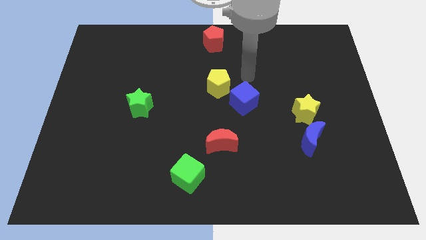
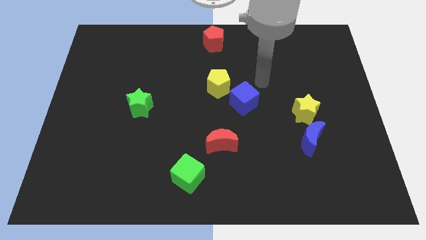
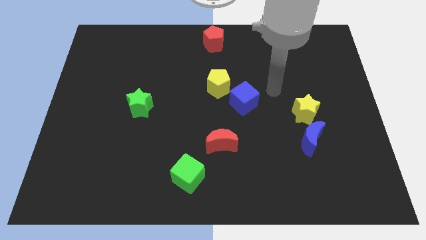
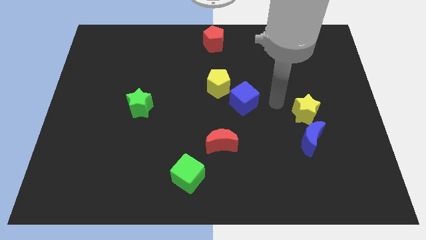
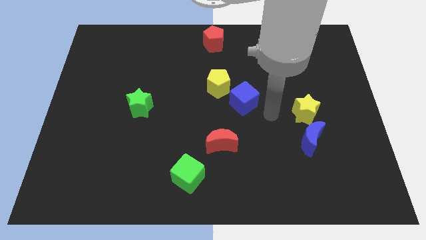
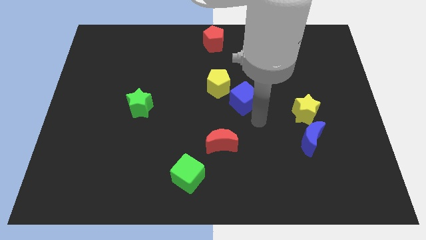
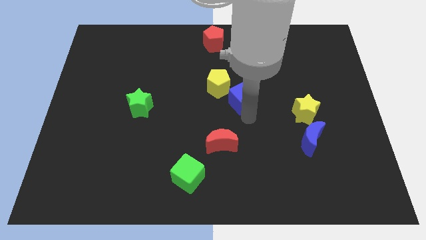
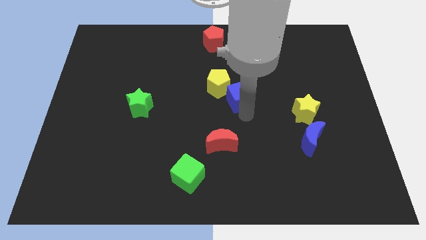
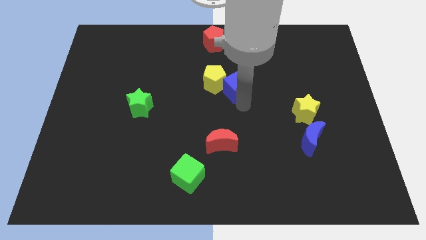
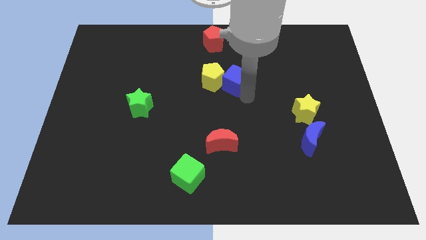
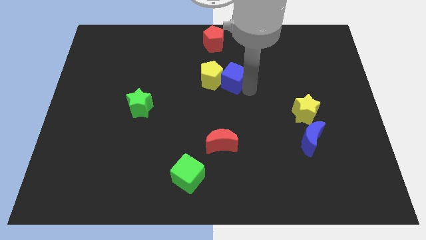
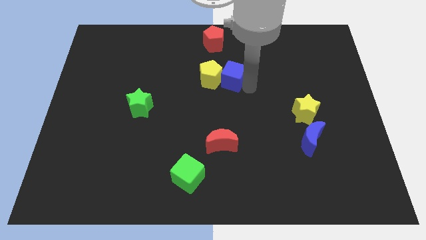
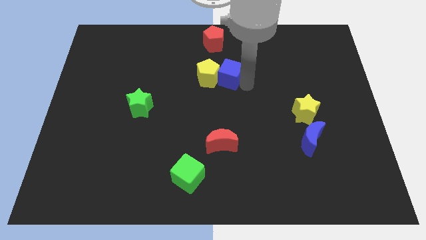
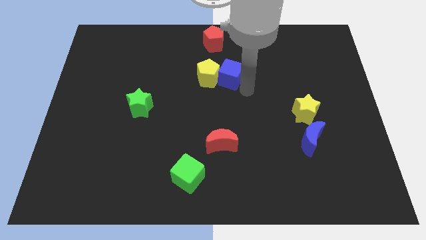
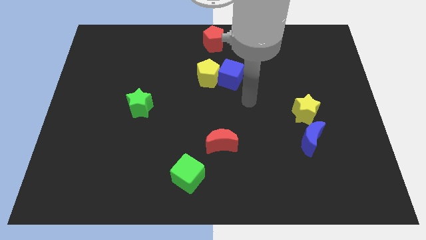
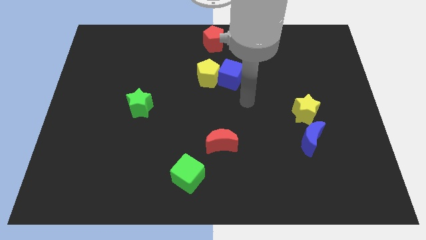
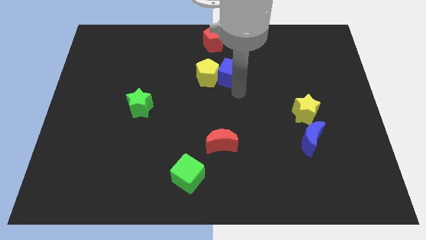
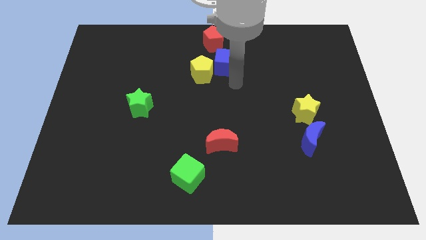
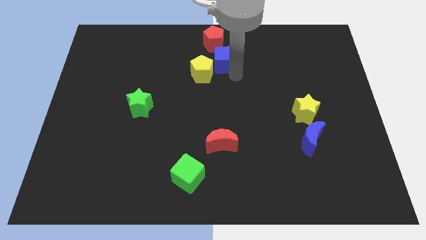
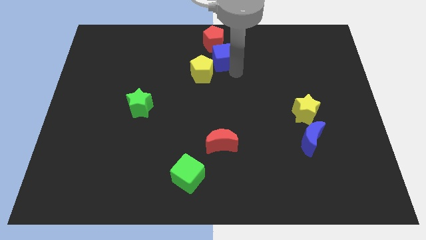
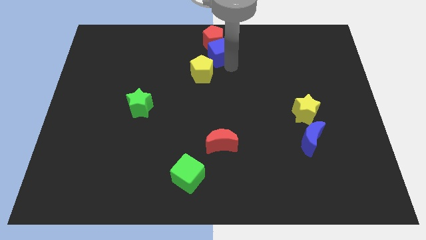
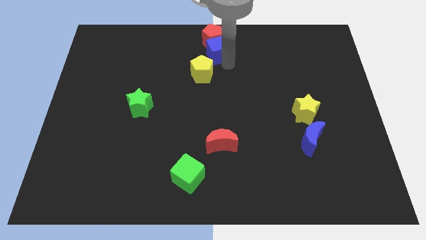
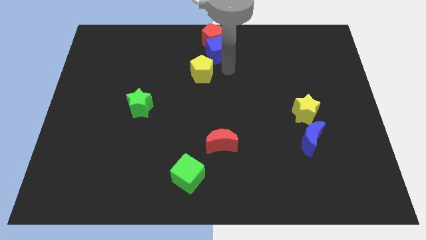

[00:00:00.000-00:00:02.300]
push the blue cube below into red pentagon

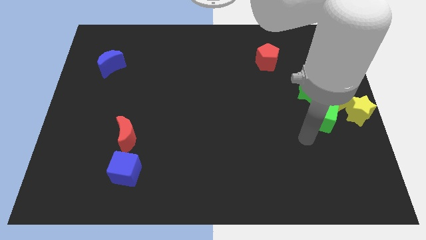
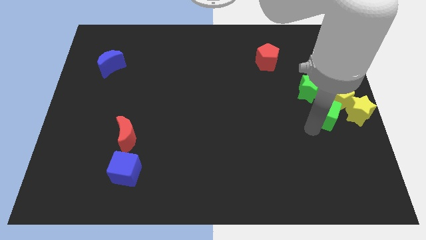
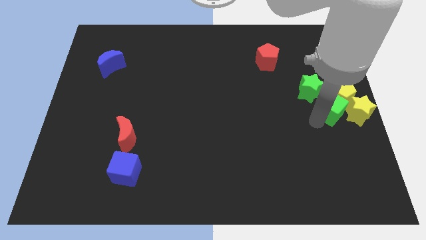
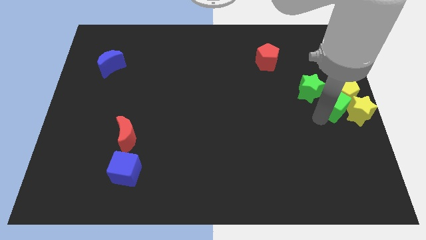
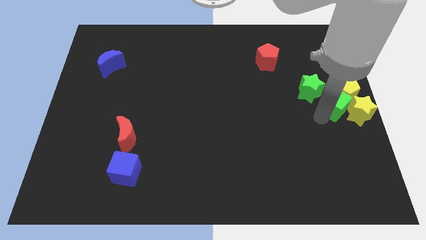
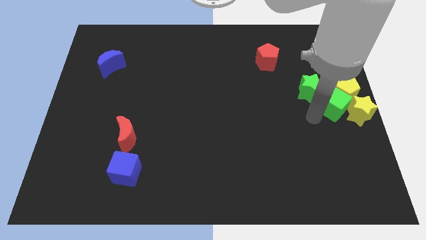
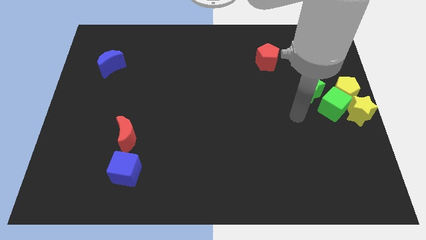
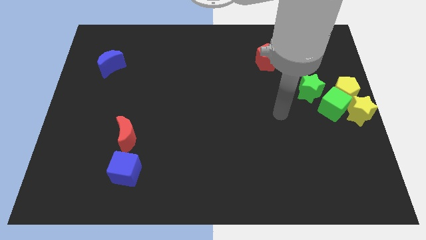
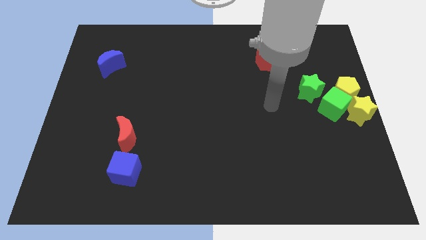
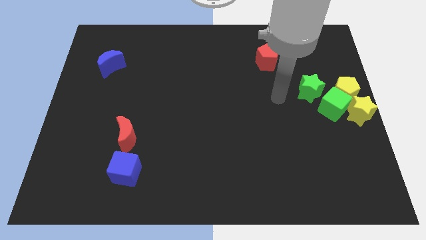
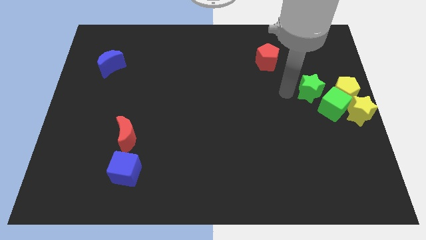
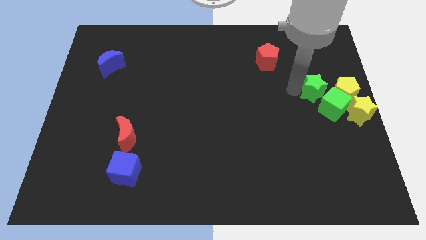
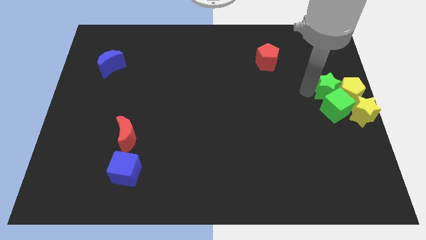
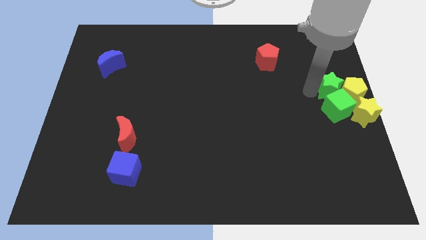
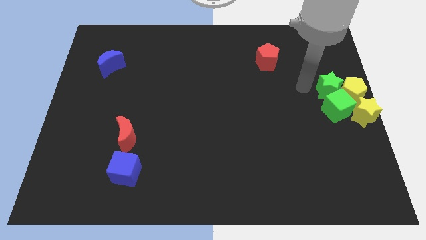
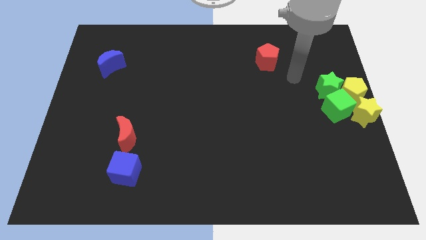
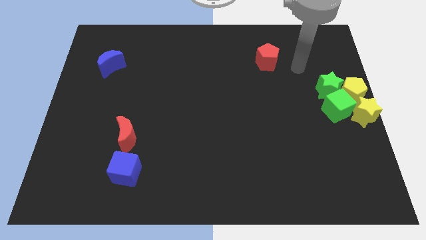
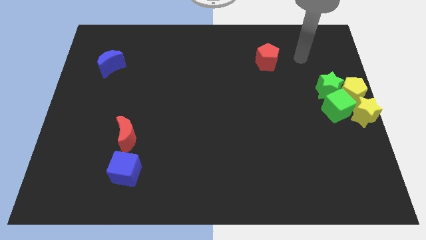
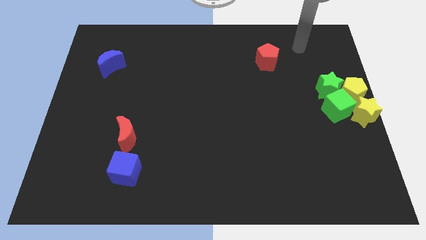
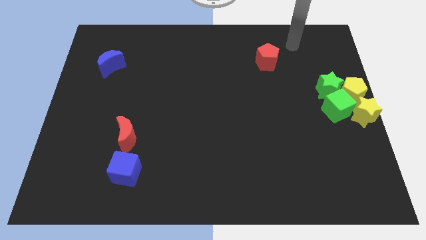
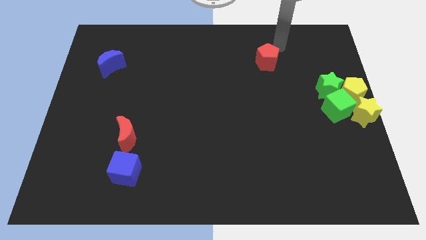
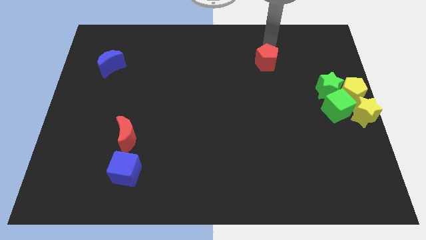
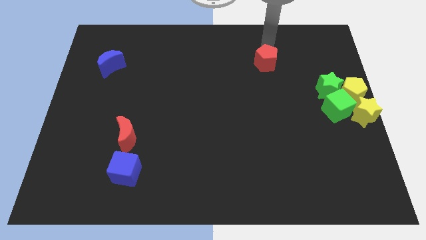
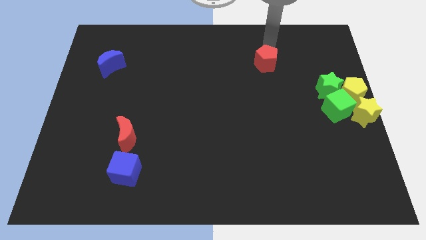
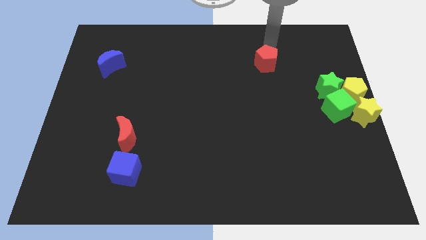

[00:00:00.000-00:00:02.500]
push the green and yellow blocks to the right center of the board

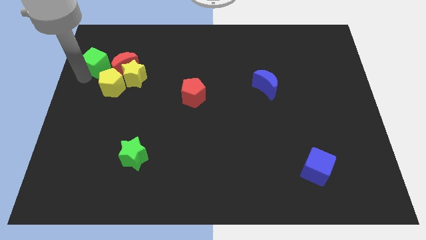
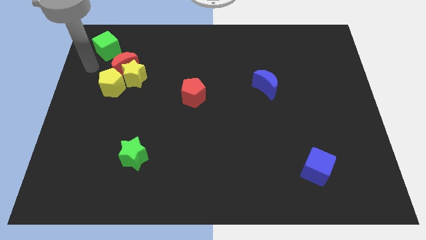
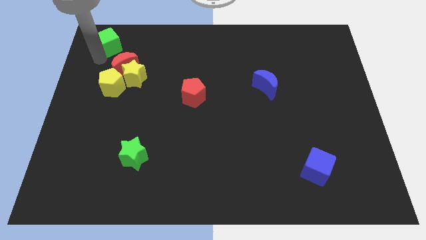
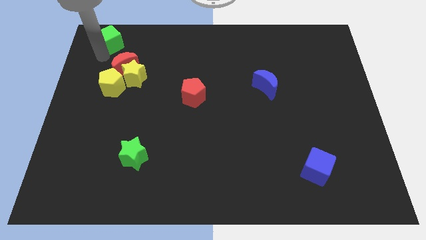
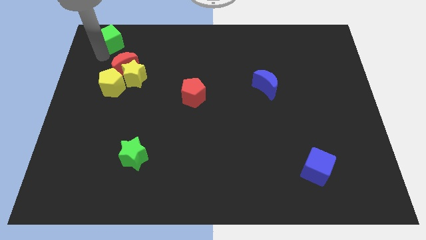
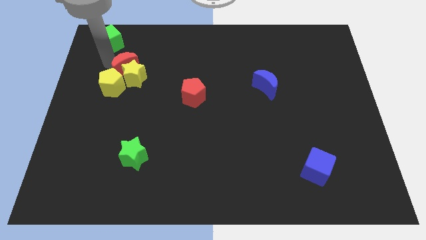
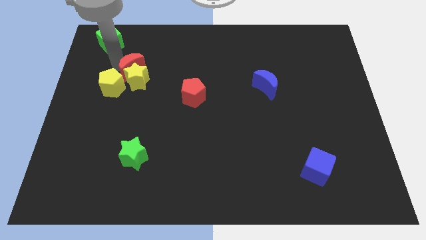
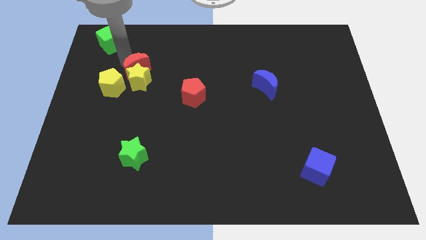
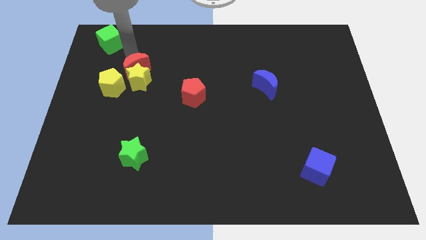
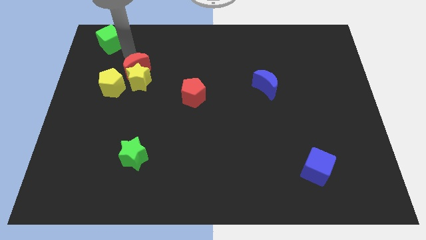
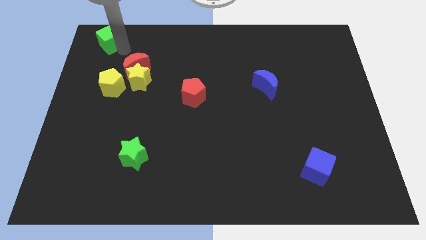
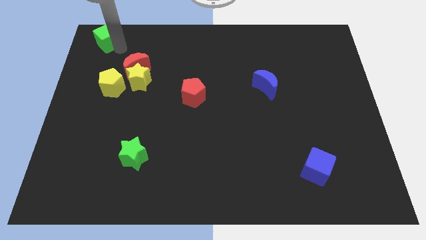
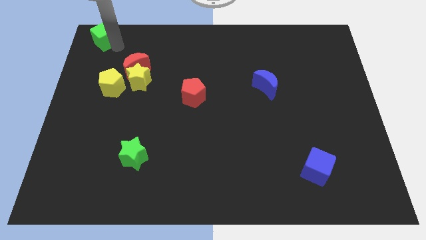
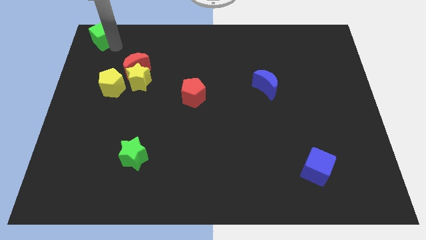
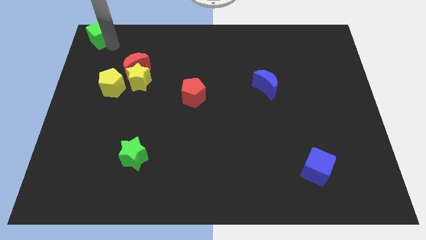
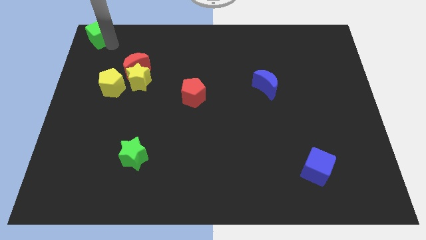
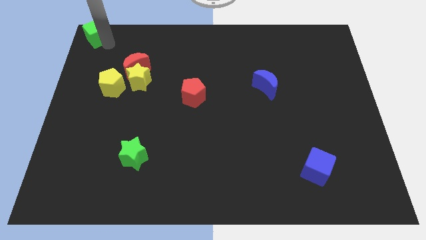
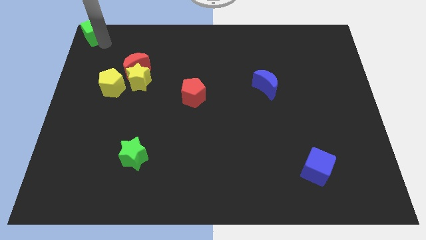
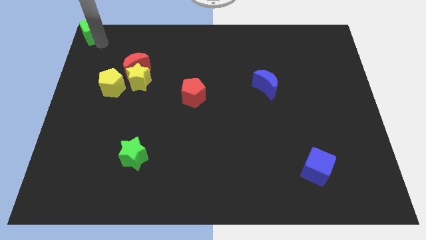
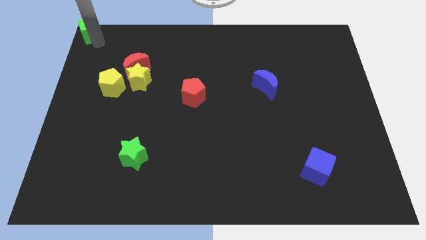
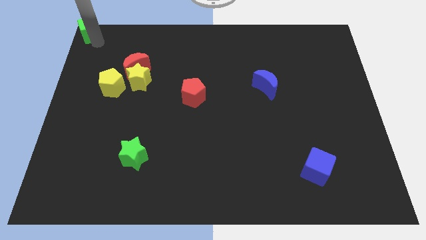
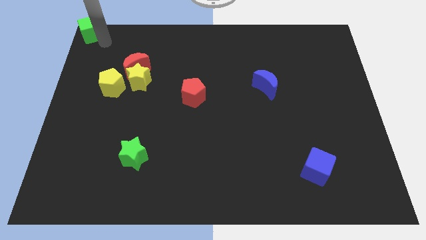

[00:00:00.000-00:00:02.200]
place the green cube at the top left corner of the board

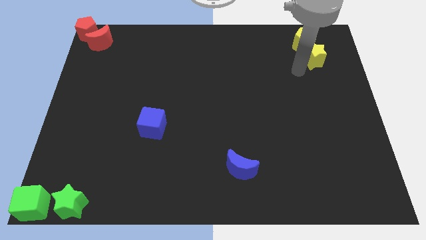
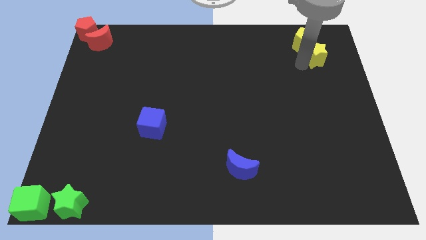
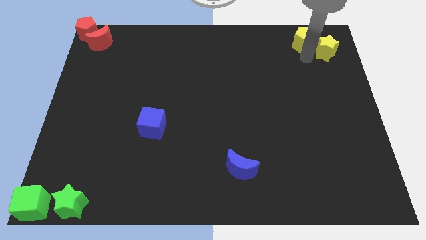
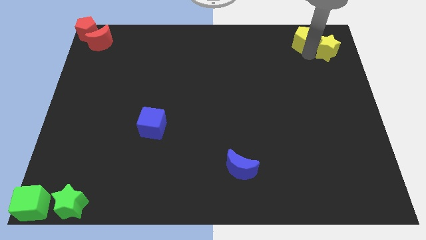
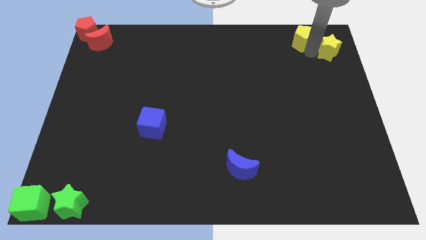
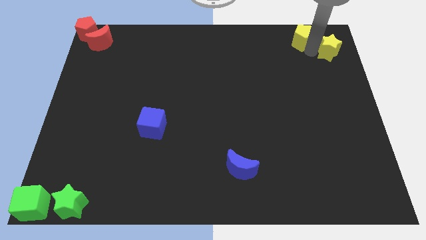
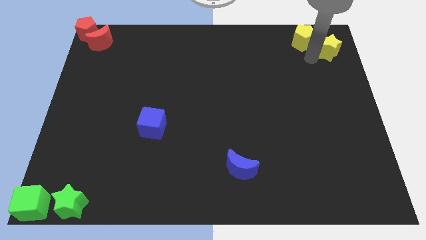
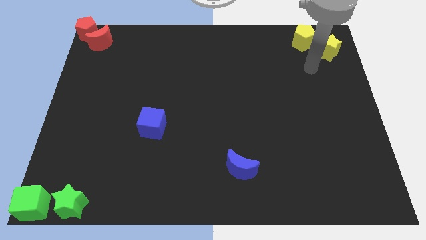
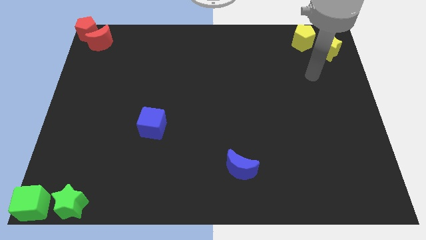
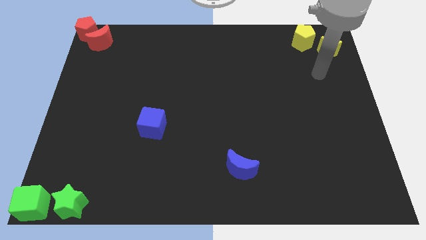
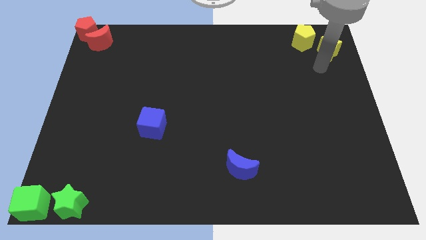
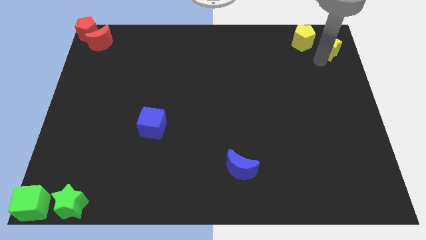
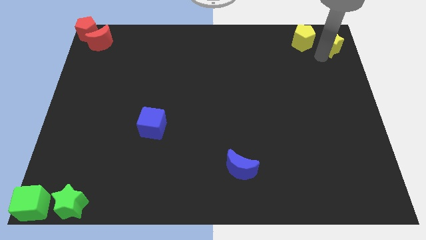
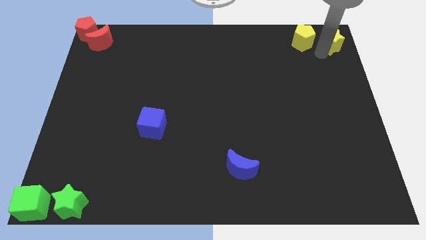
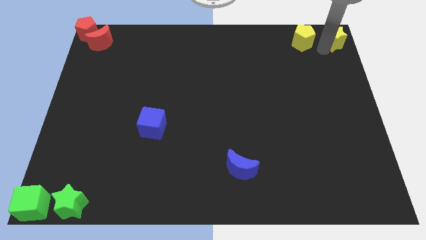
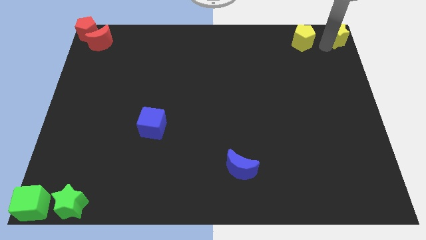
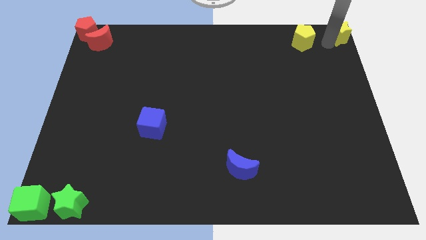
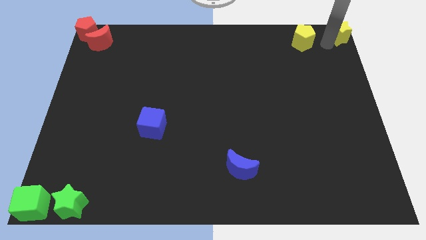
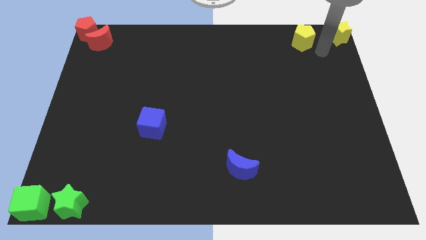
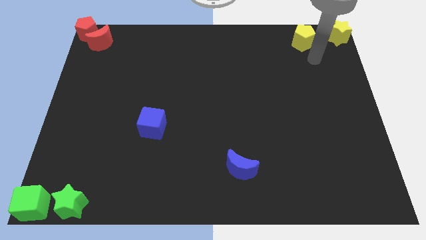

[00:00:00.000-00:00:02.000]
push the yellow blocks towards the top right corner of the board
